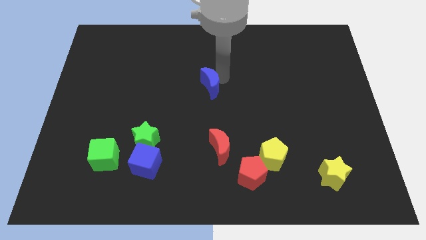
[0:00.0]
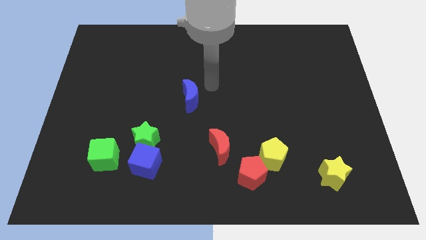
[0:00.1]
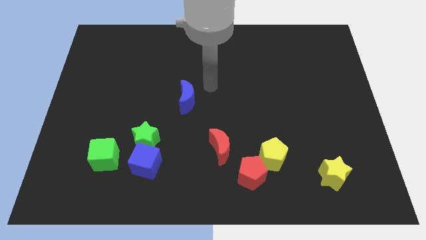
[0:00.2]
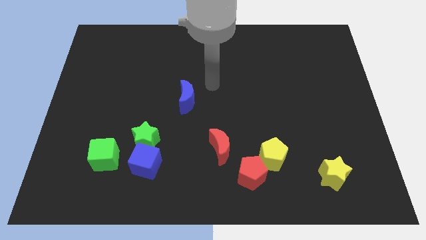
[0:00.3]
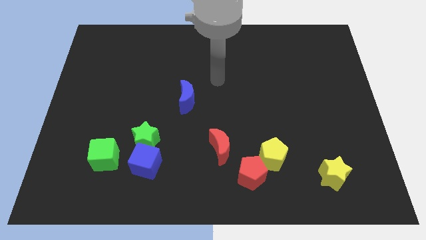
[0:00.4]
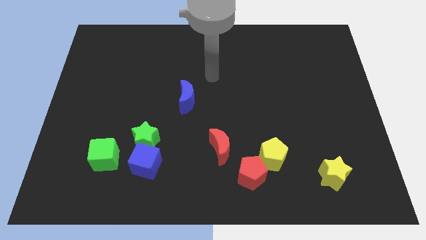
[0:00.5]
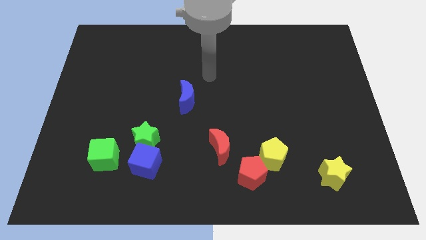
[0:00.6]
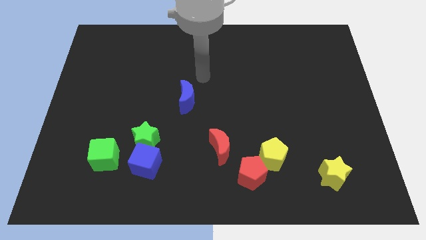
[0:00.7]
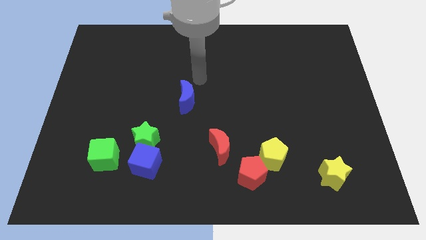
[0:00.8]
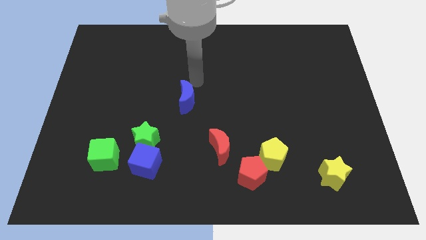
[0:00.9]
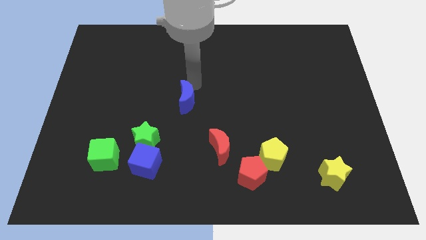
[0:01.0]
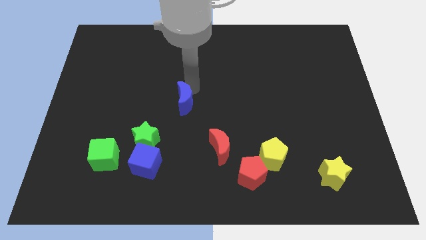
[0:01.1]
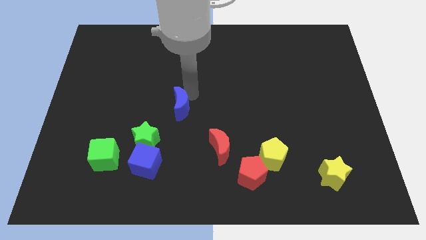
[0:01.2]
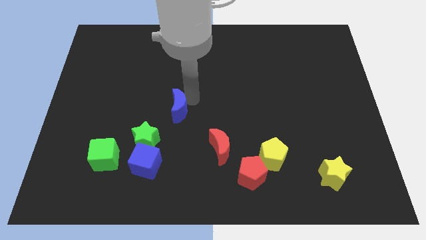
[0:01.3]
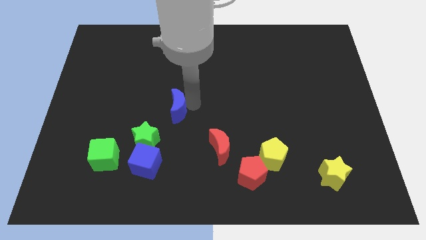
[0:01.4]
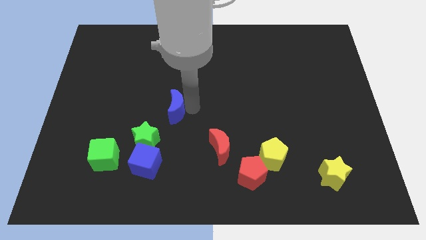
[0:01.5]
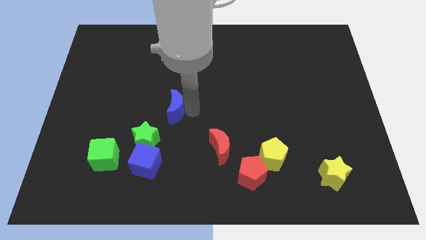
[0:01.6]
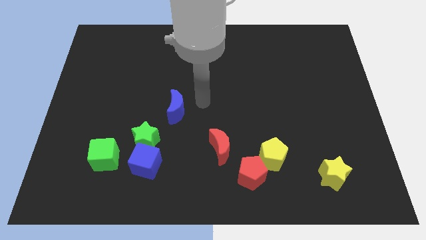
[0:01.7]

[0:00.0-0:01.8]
move the blue crescent towards the green star

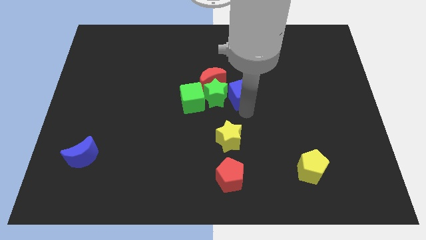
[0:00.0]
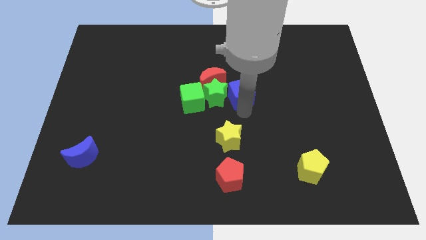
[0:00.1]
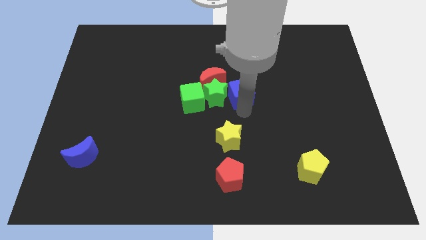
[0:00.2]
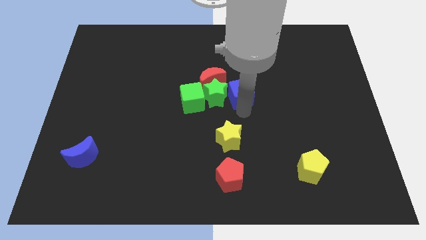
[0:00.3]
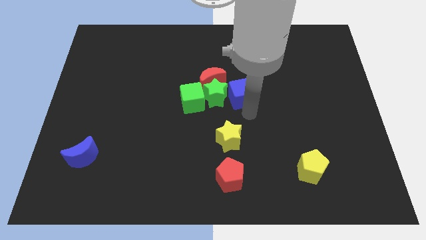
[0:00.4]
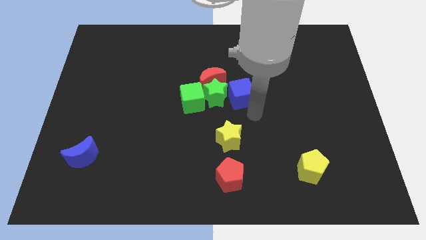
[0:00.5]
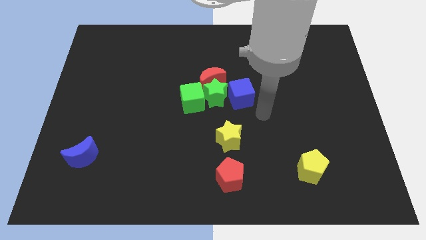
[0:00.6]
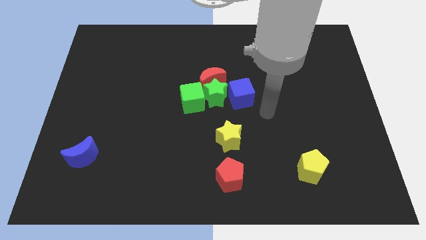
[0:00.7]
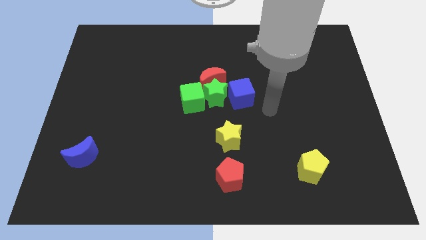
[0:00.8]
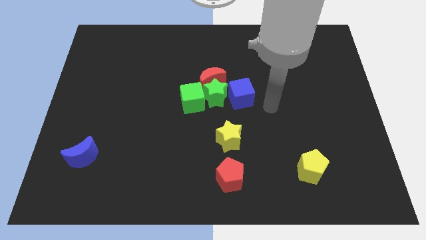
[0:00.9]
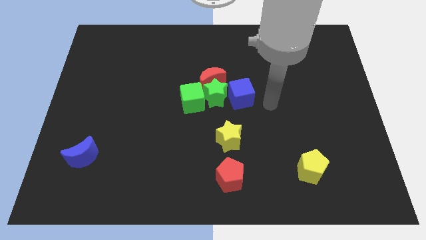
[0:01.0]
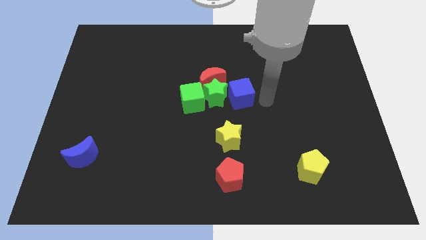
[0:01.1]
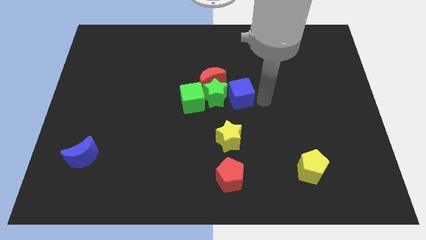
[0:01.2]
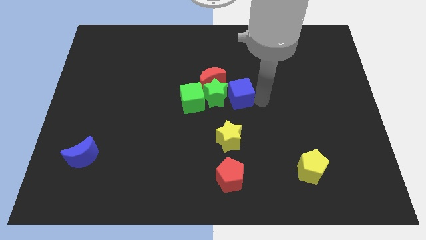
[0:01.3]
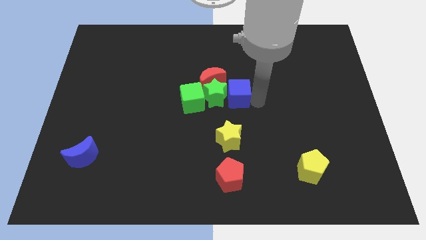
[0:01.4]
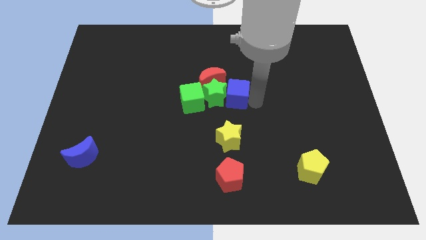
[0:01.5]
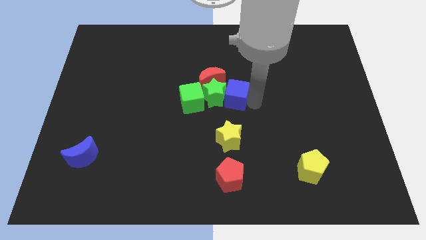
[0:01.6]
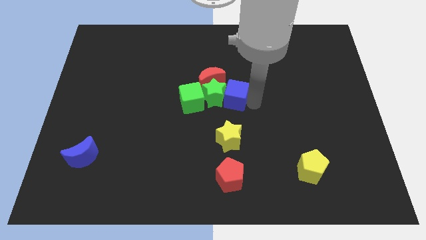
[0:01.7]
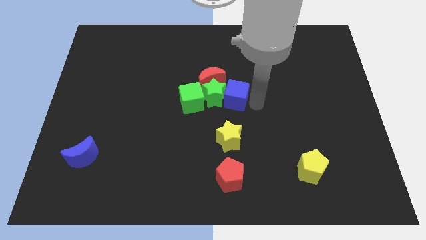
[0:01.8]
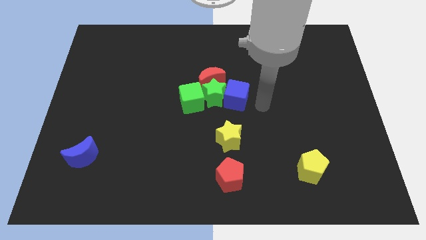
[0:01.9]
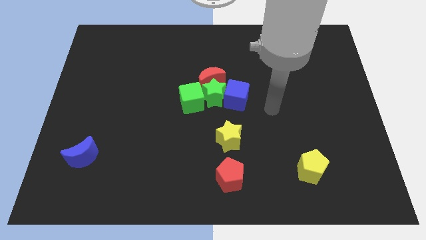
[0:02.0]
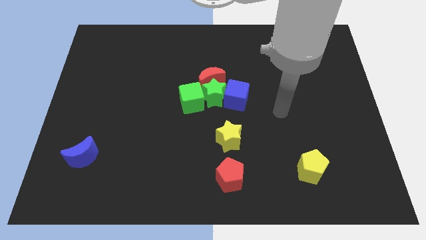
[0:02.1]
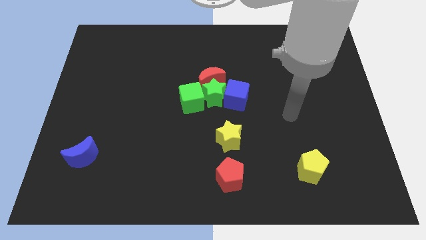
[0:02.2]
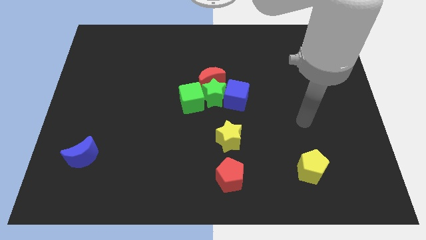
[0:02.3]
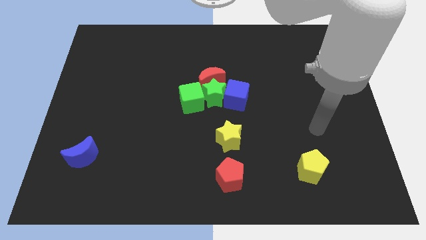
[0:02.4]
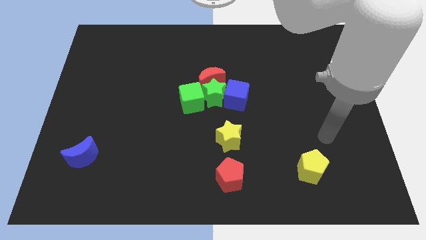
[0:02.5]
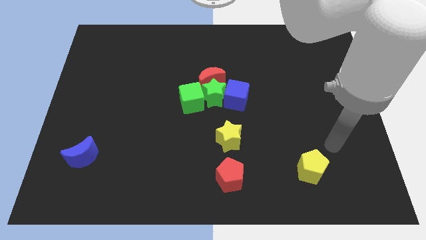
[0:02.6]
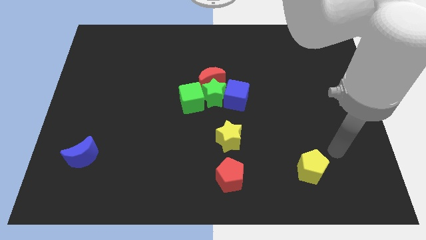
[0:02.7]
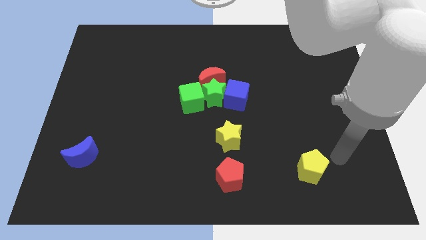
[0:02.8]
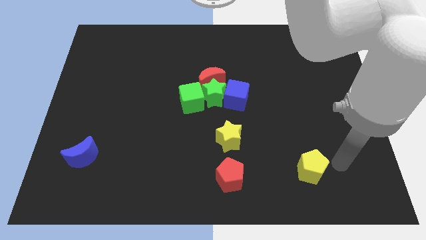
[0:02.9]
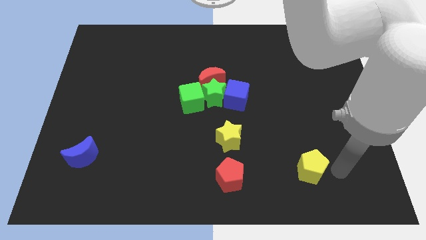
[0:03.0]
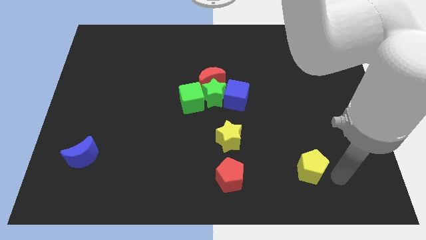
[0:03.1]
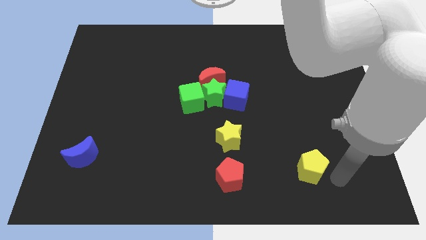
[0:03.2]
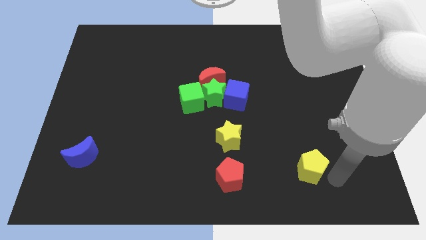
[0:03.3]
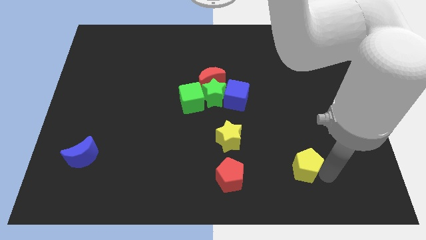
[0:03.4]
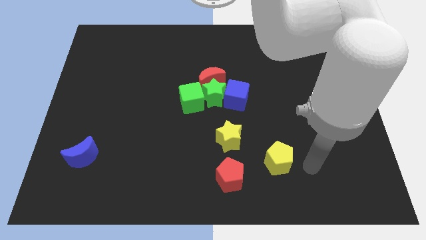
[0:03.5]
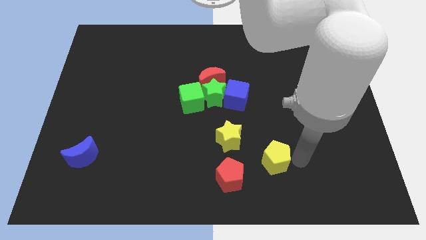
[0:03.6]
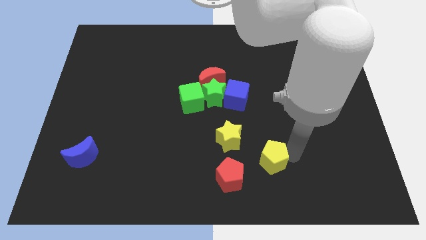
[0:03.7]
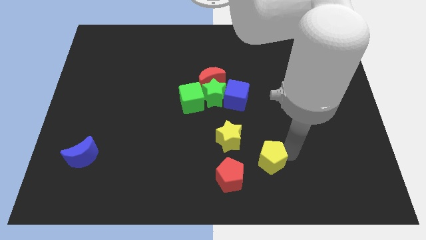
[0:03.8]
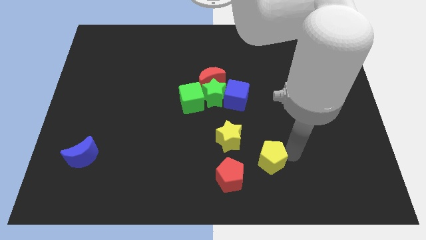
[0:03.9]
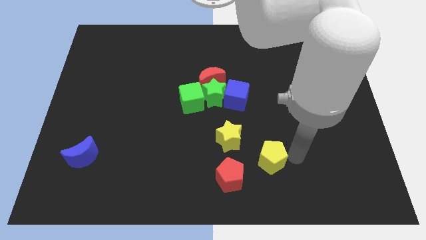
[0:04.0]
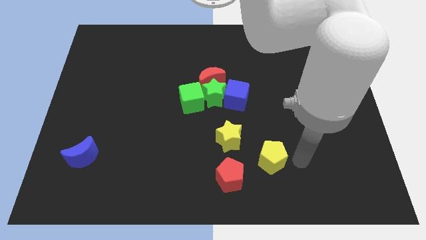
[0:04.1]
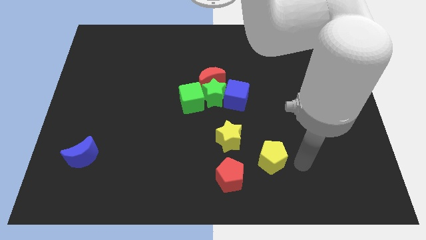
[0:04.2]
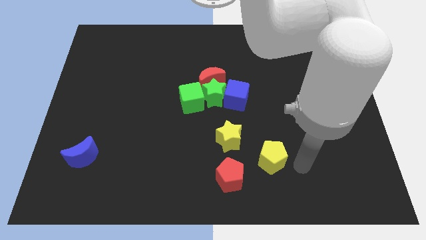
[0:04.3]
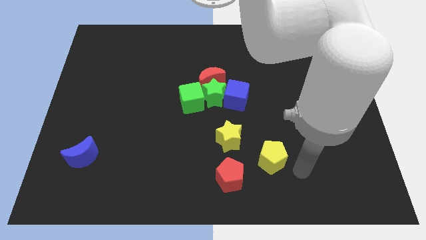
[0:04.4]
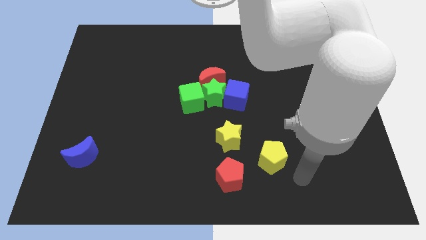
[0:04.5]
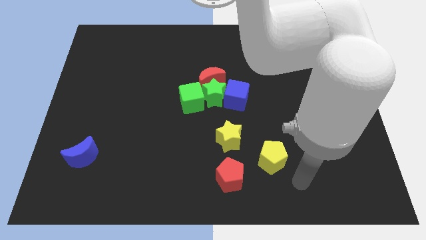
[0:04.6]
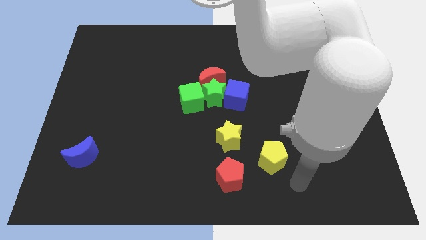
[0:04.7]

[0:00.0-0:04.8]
place the yellow pentagon diagonally top right to the red pentagon

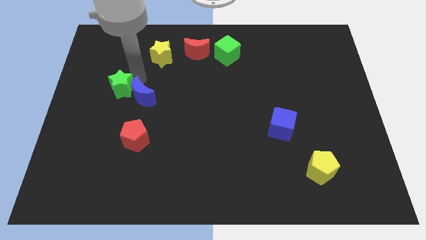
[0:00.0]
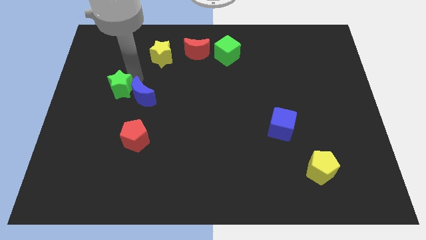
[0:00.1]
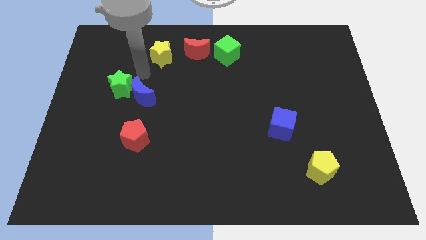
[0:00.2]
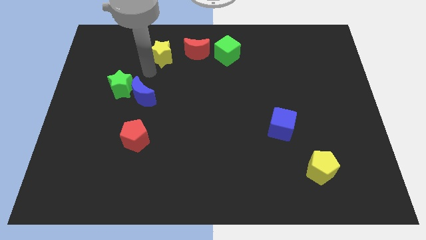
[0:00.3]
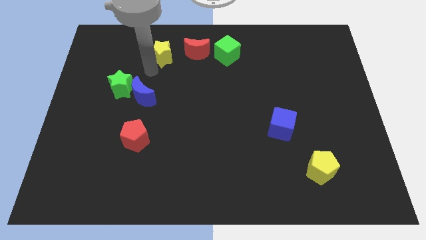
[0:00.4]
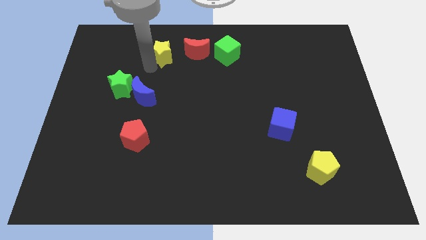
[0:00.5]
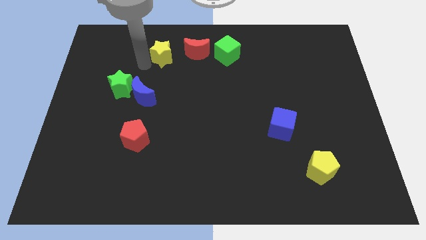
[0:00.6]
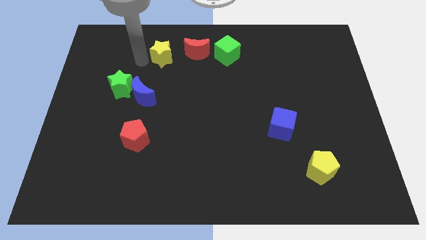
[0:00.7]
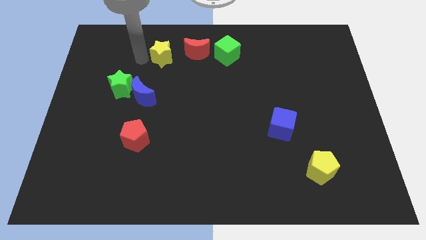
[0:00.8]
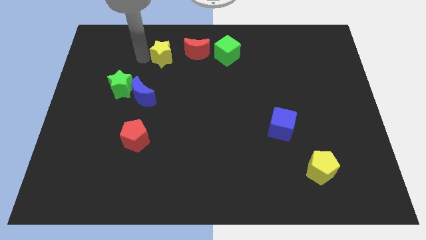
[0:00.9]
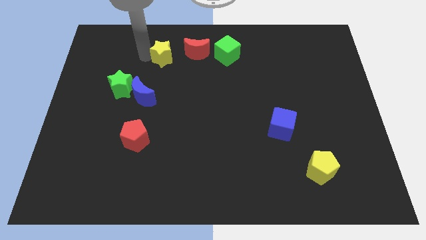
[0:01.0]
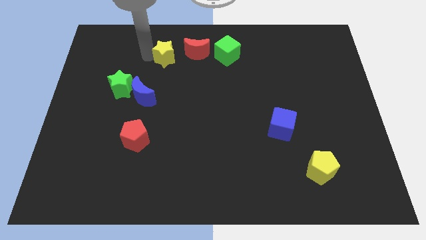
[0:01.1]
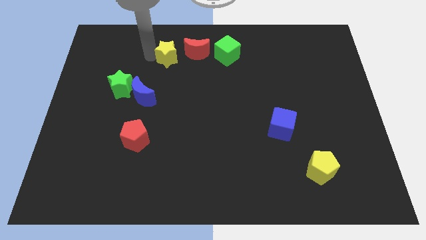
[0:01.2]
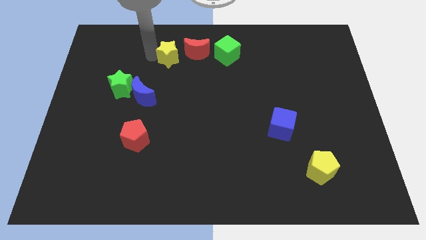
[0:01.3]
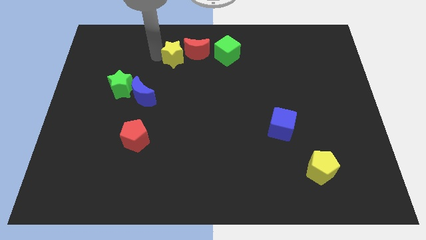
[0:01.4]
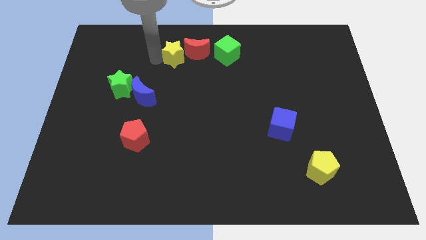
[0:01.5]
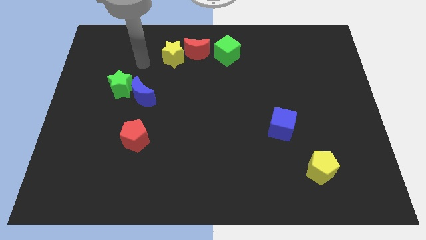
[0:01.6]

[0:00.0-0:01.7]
move the yellow star close to the red crescent

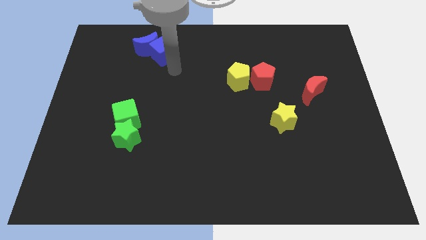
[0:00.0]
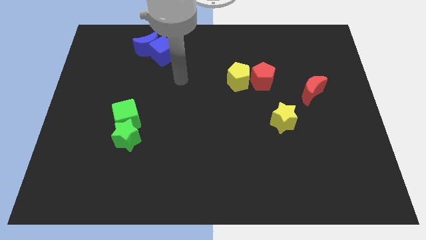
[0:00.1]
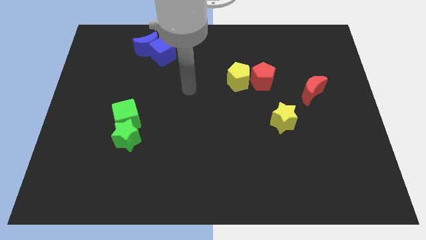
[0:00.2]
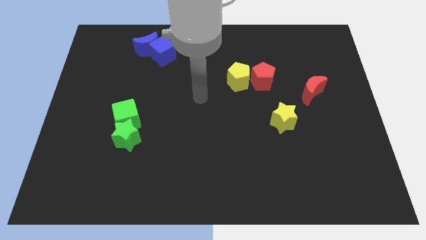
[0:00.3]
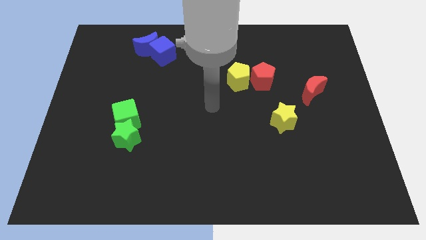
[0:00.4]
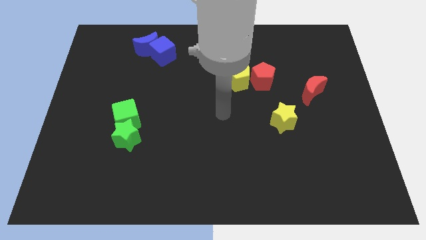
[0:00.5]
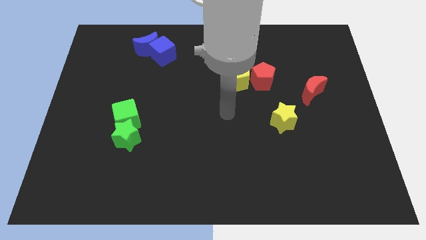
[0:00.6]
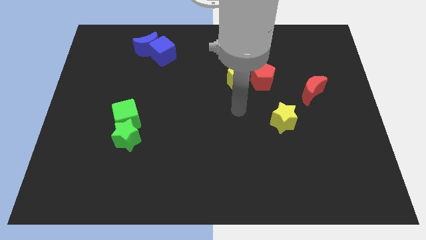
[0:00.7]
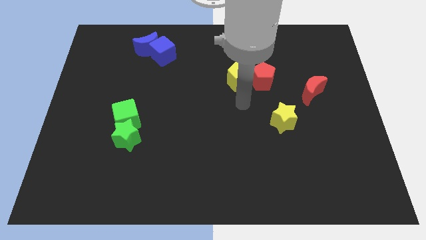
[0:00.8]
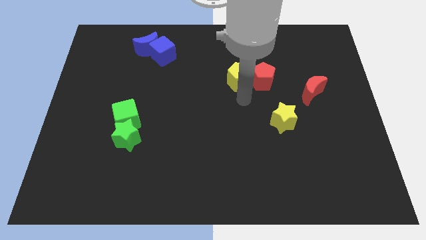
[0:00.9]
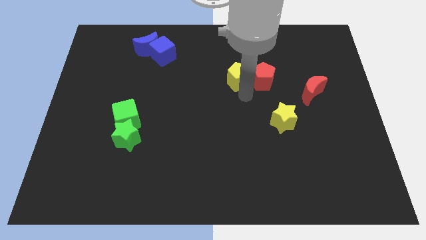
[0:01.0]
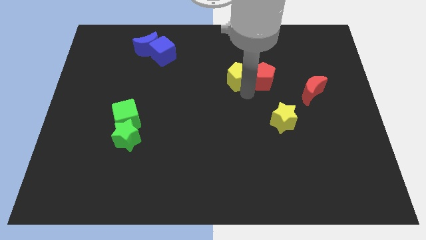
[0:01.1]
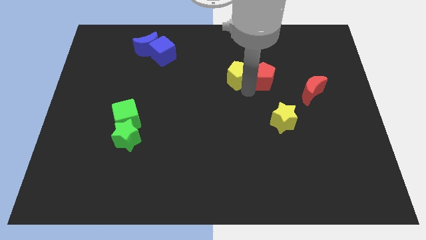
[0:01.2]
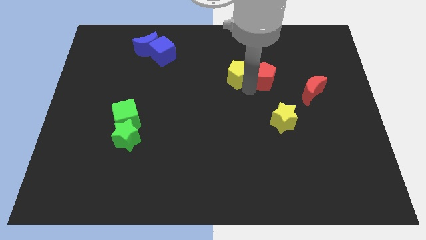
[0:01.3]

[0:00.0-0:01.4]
tap the yellow pentagon
